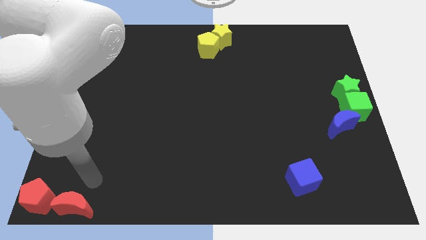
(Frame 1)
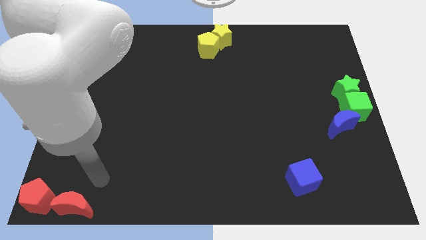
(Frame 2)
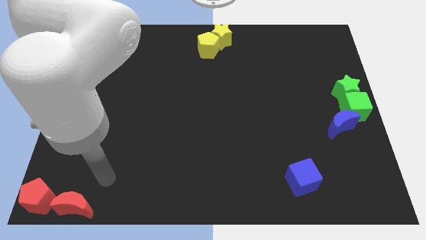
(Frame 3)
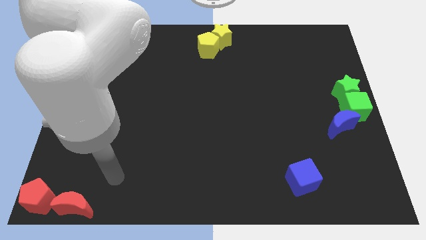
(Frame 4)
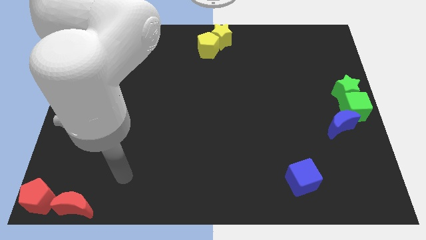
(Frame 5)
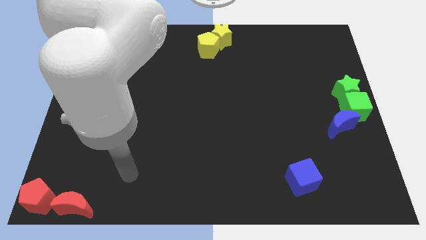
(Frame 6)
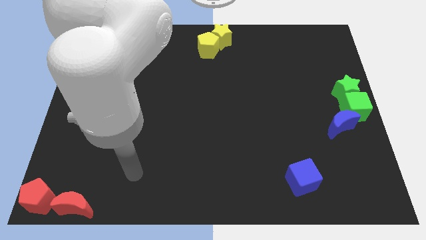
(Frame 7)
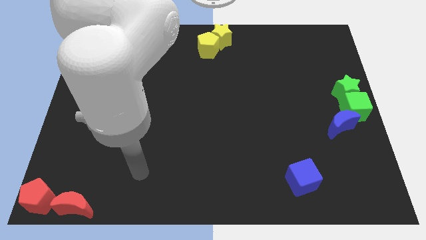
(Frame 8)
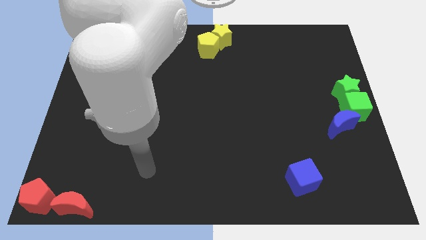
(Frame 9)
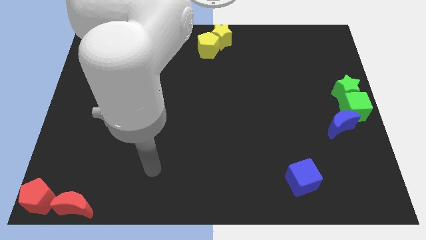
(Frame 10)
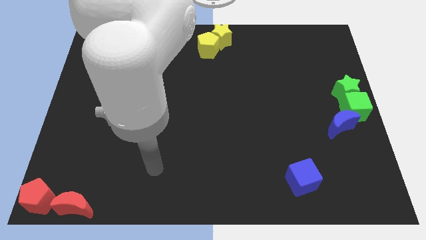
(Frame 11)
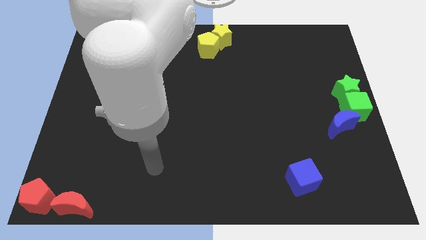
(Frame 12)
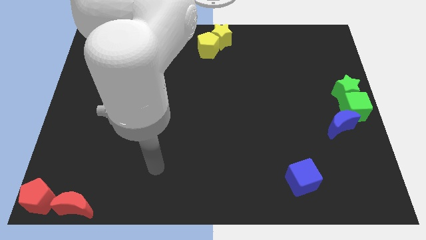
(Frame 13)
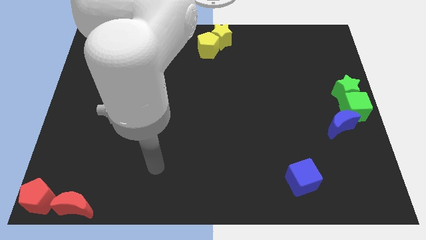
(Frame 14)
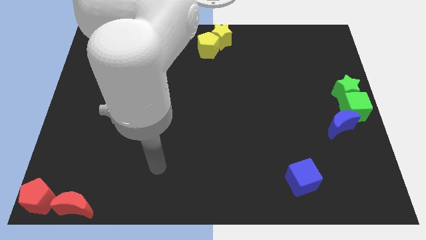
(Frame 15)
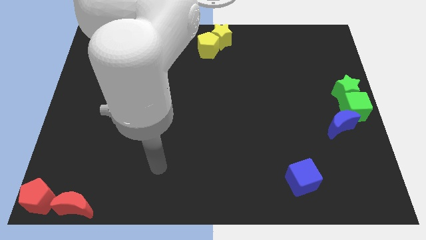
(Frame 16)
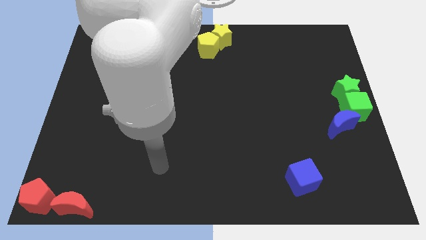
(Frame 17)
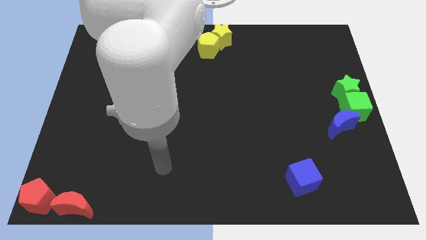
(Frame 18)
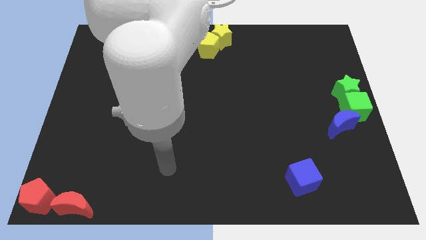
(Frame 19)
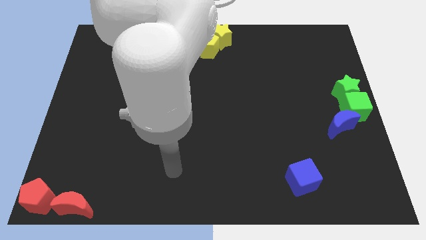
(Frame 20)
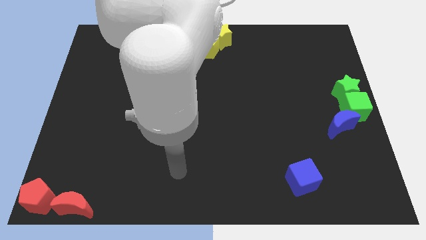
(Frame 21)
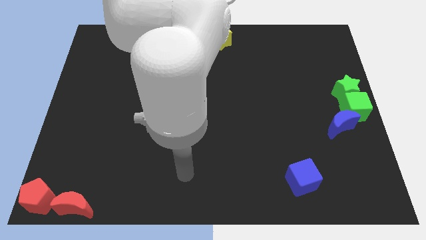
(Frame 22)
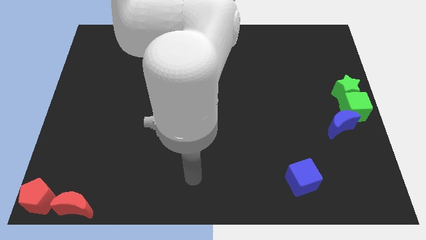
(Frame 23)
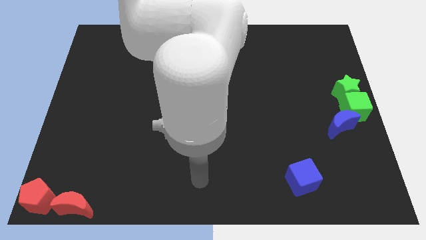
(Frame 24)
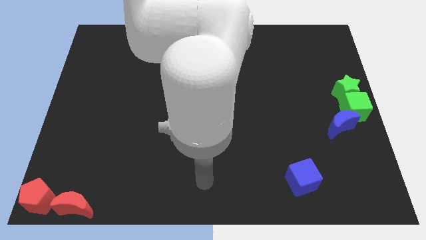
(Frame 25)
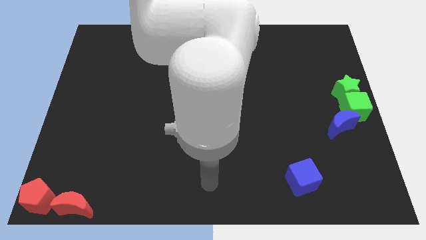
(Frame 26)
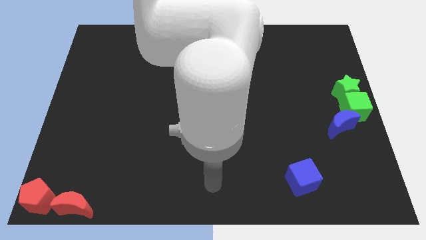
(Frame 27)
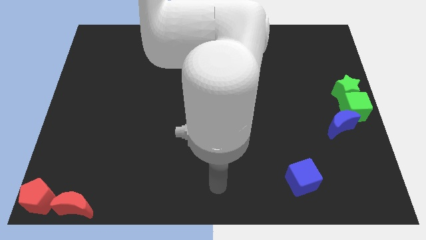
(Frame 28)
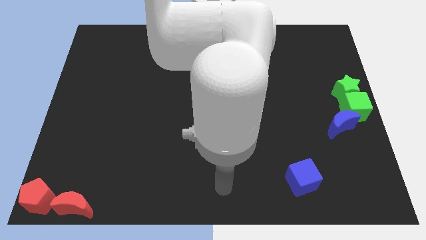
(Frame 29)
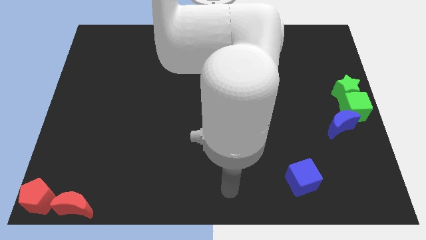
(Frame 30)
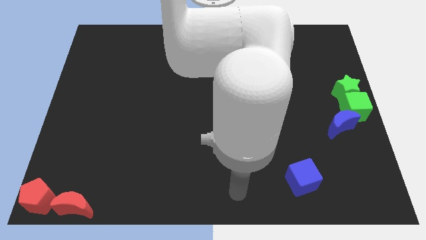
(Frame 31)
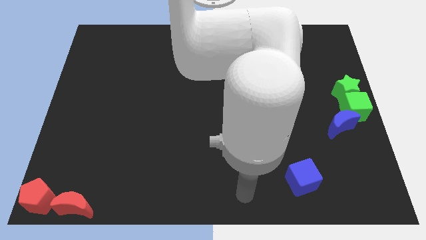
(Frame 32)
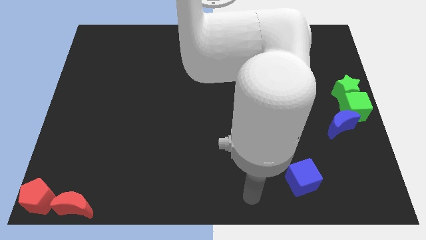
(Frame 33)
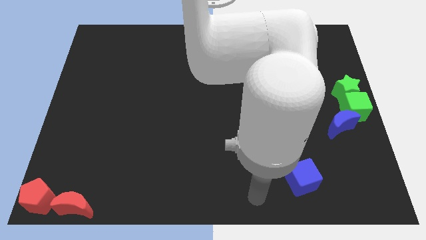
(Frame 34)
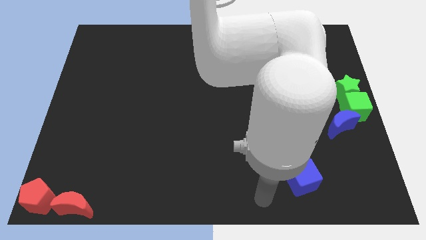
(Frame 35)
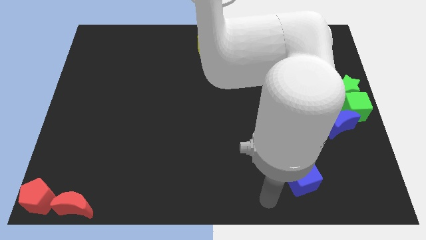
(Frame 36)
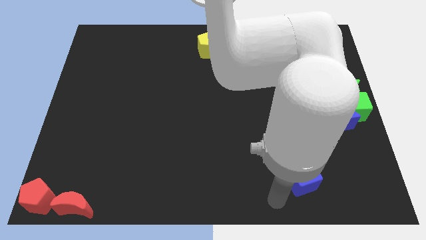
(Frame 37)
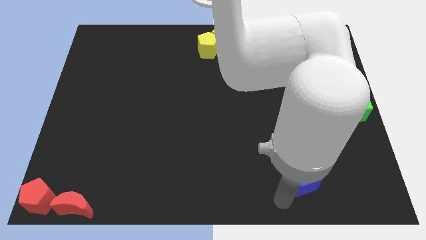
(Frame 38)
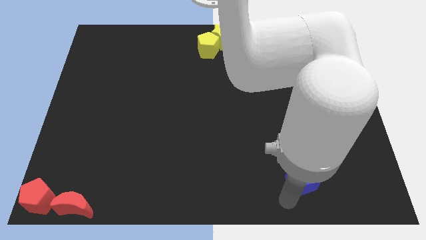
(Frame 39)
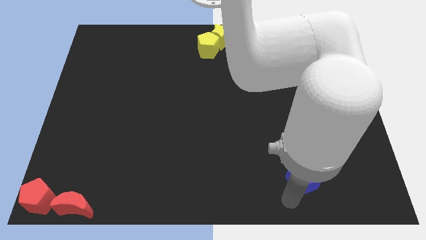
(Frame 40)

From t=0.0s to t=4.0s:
point the arm to the bottom of the blue cube

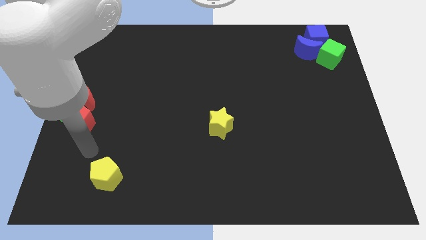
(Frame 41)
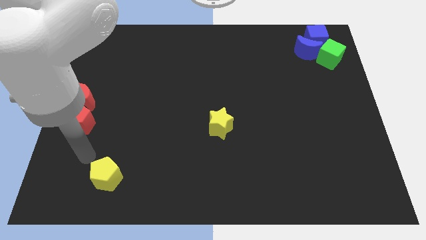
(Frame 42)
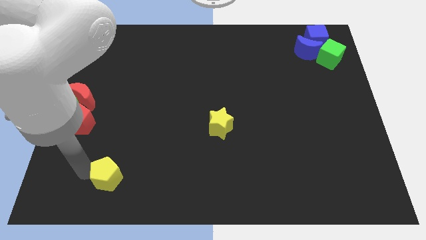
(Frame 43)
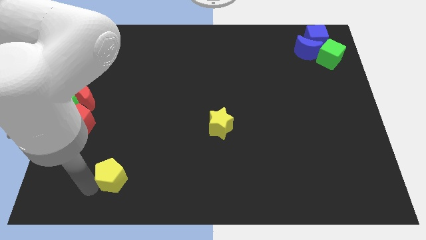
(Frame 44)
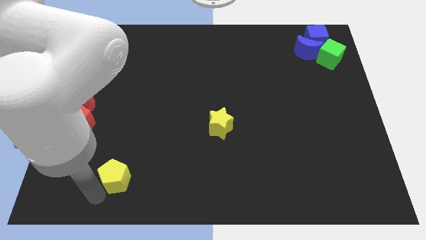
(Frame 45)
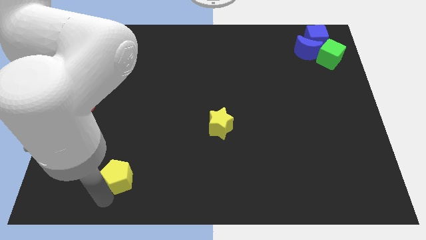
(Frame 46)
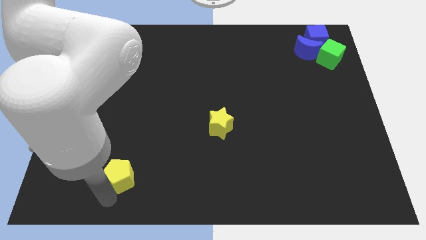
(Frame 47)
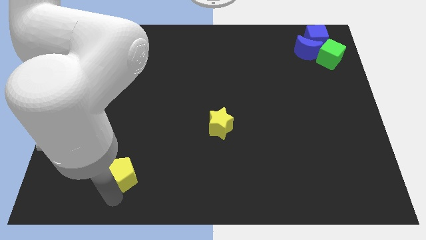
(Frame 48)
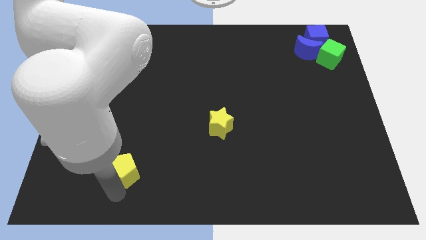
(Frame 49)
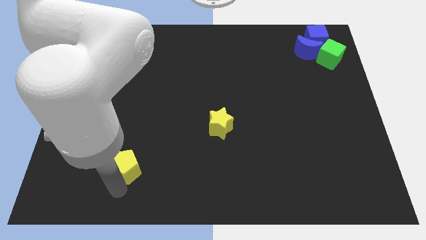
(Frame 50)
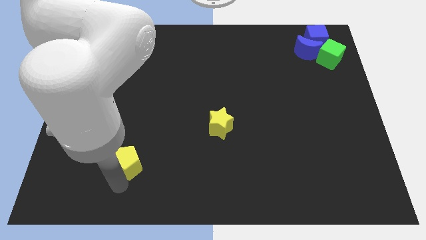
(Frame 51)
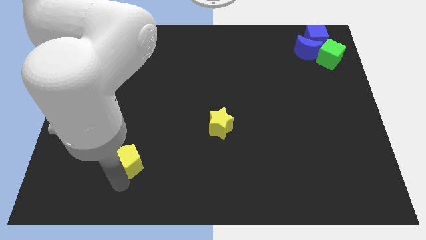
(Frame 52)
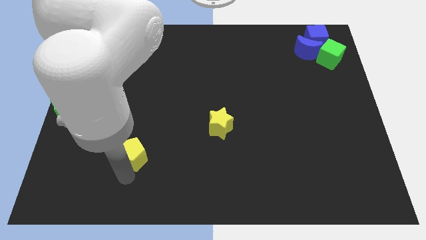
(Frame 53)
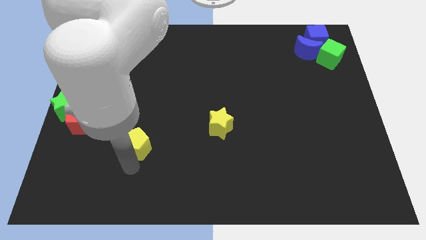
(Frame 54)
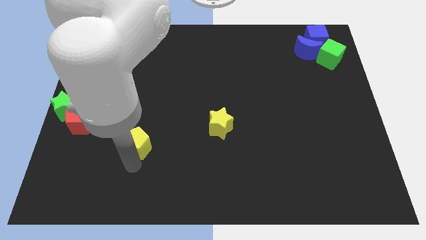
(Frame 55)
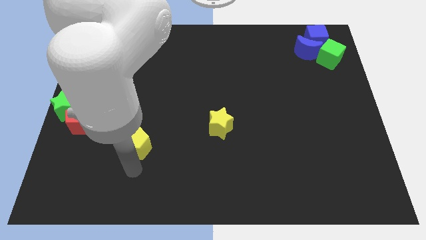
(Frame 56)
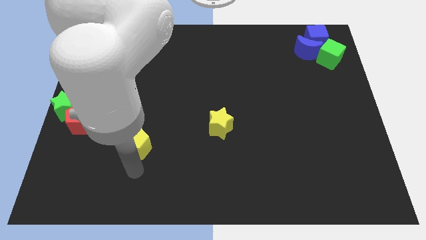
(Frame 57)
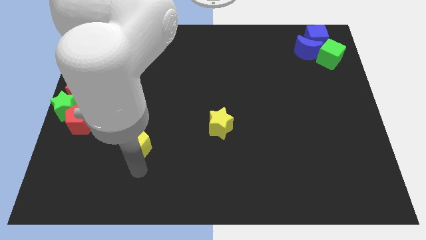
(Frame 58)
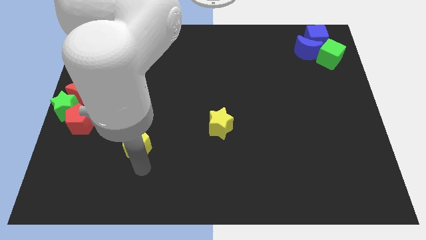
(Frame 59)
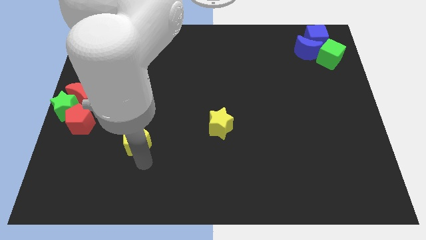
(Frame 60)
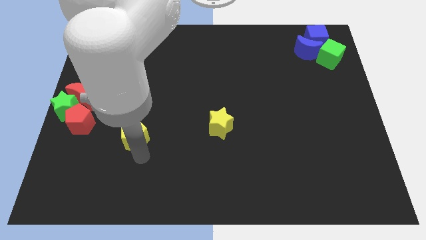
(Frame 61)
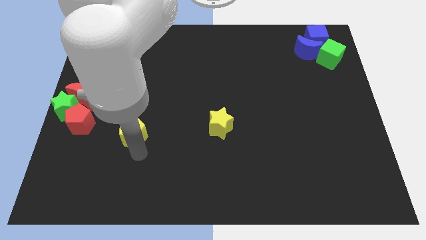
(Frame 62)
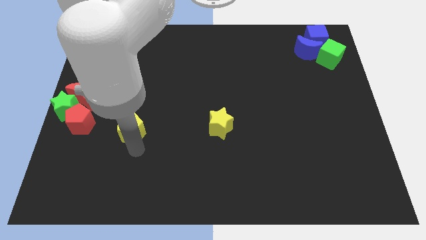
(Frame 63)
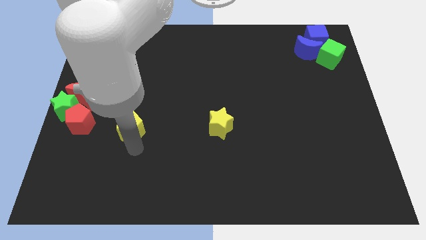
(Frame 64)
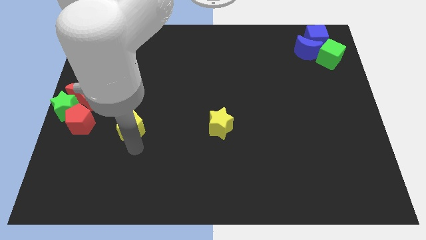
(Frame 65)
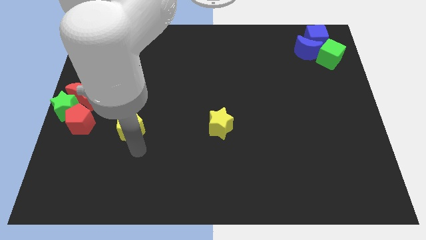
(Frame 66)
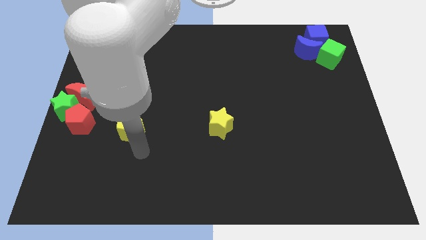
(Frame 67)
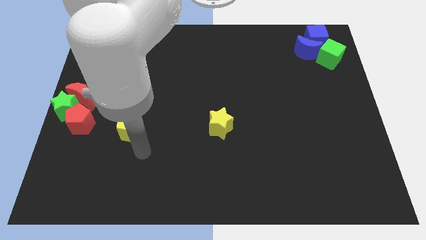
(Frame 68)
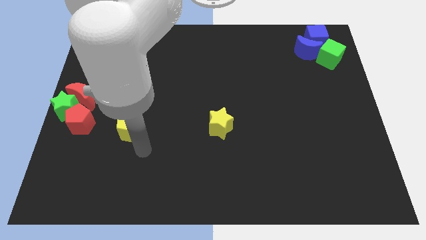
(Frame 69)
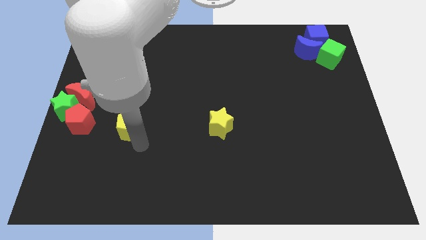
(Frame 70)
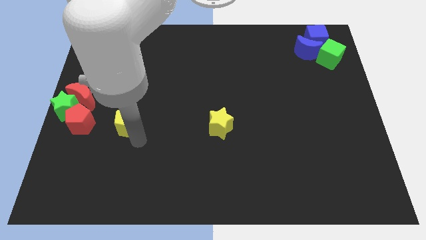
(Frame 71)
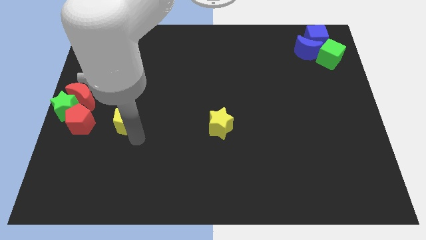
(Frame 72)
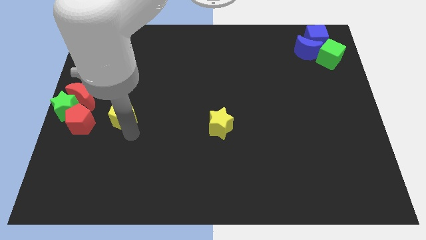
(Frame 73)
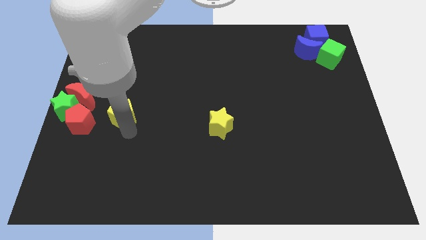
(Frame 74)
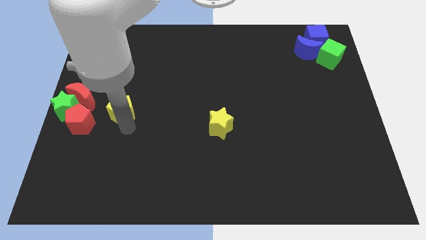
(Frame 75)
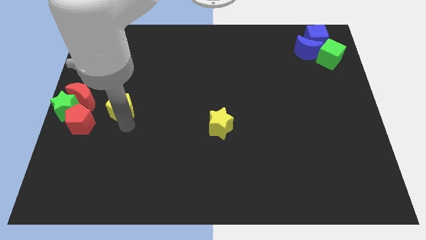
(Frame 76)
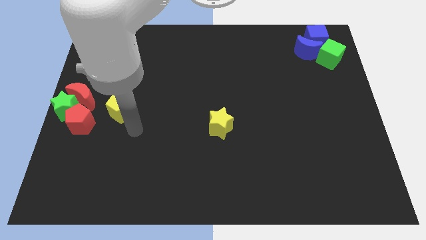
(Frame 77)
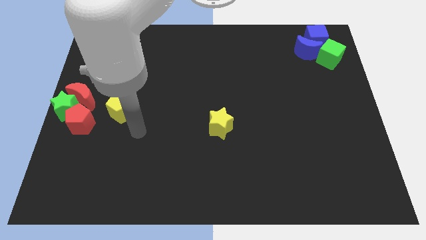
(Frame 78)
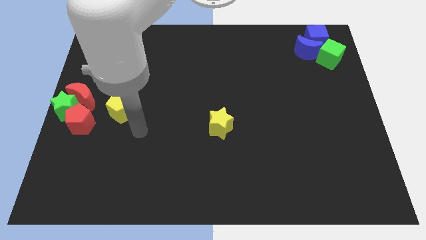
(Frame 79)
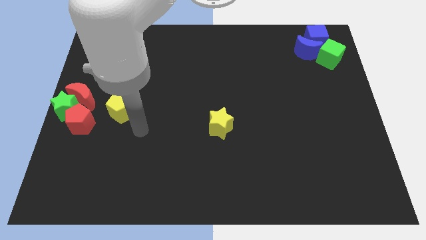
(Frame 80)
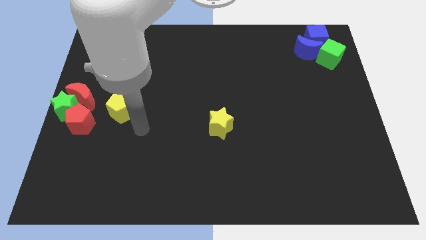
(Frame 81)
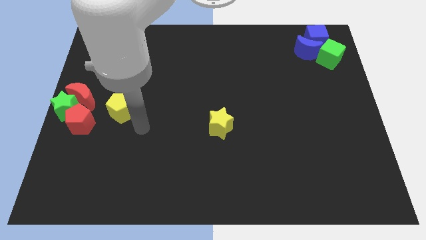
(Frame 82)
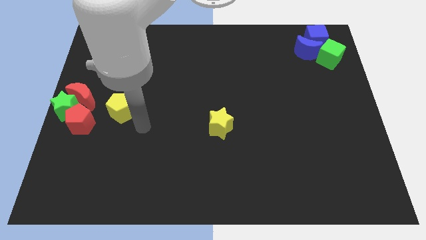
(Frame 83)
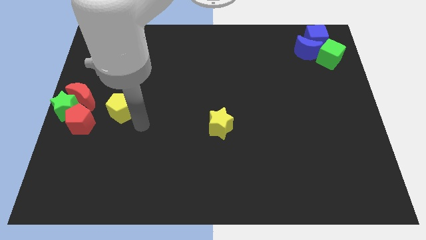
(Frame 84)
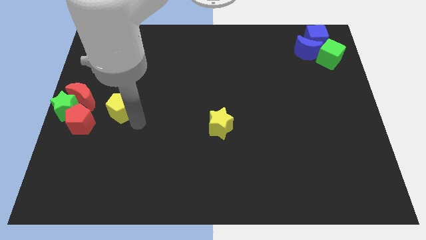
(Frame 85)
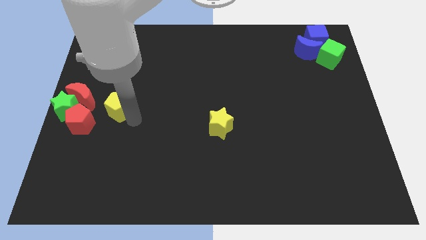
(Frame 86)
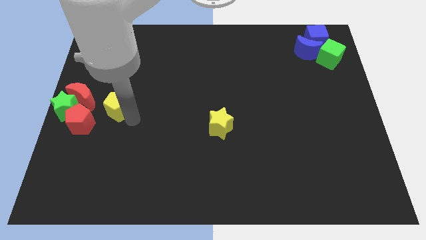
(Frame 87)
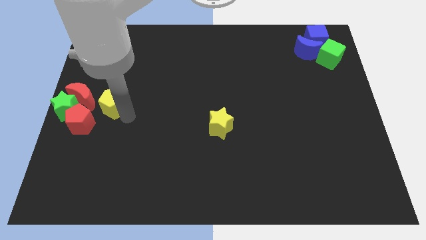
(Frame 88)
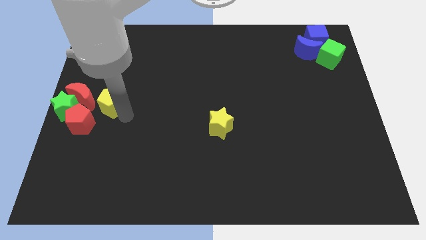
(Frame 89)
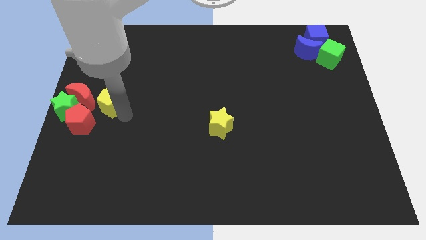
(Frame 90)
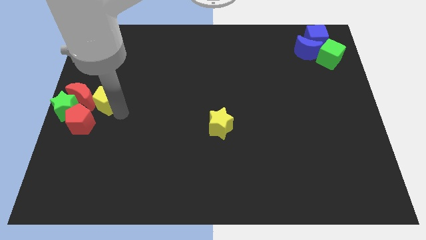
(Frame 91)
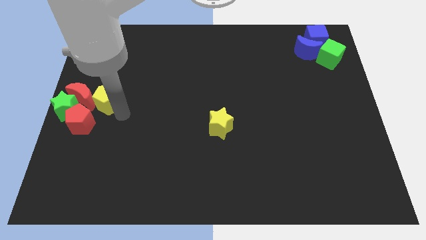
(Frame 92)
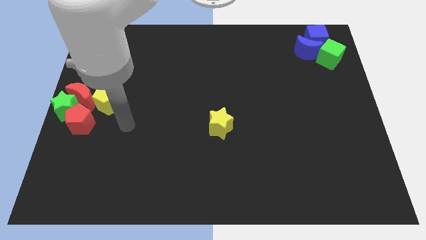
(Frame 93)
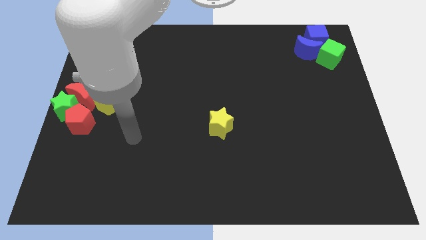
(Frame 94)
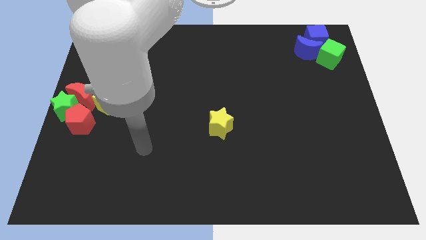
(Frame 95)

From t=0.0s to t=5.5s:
push the yellow pentagon to the right of the red crescent
